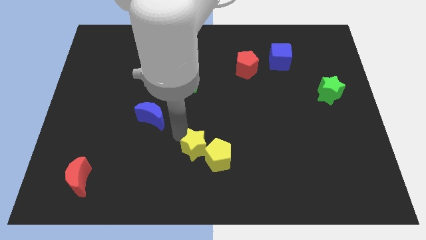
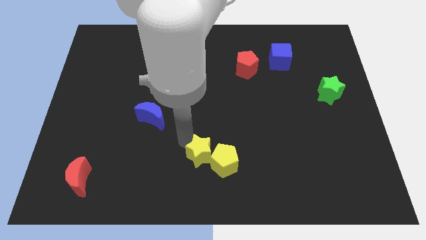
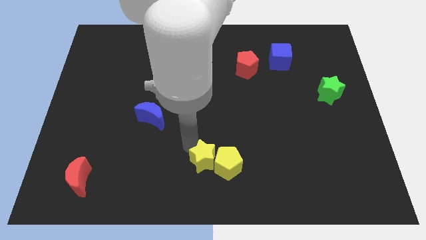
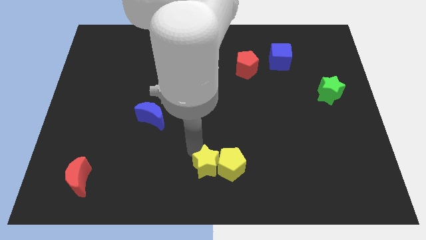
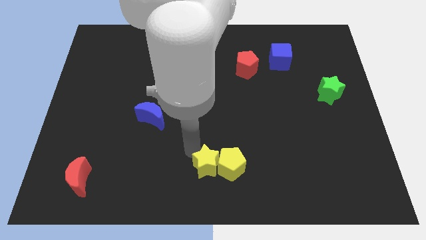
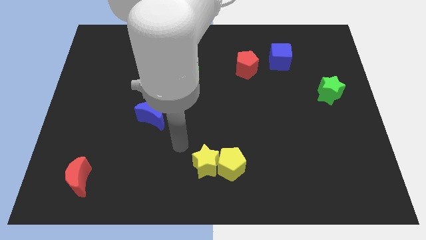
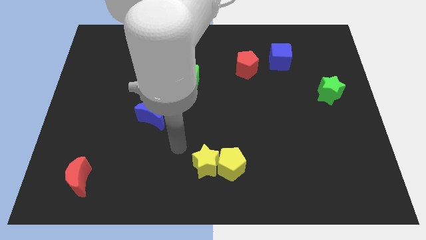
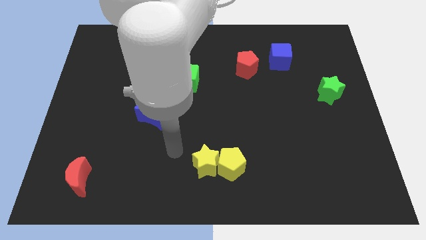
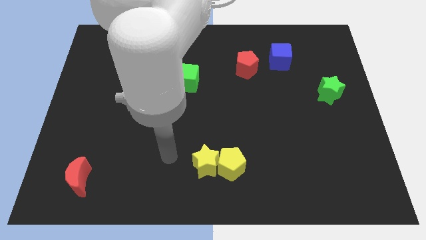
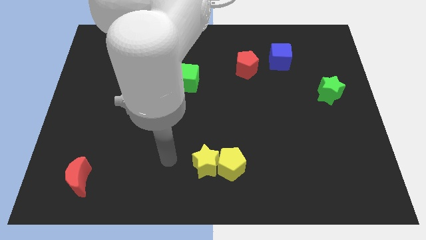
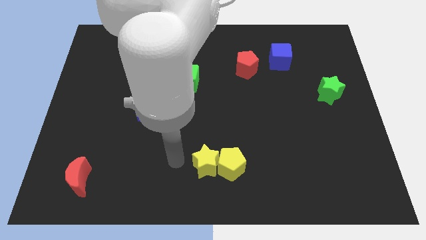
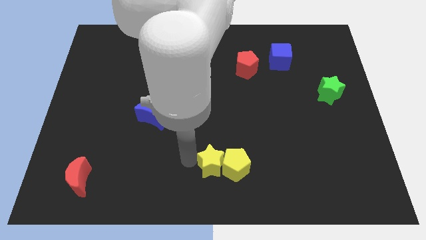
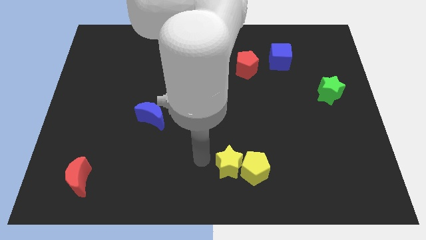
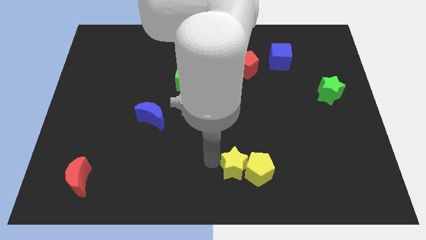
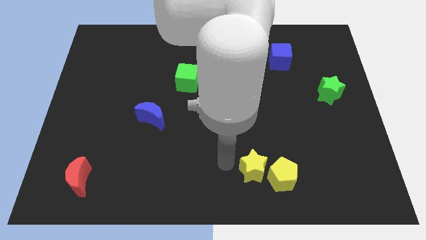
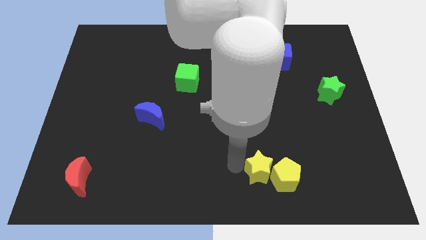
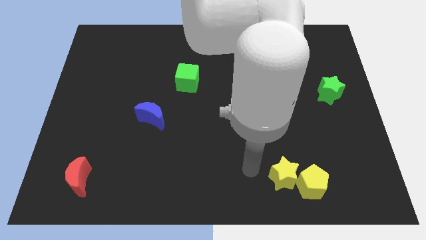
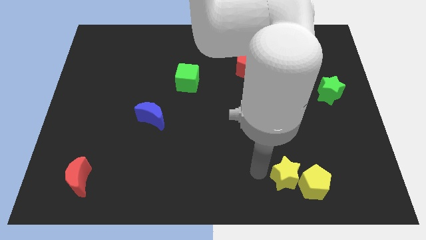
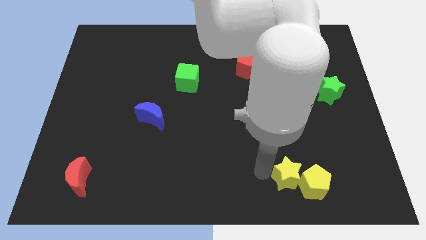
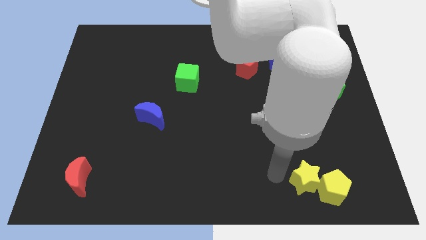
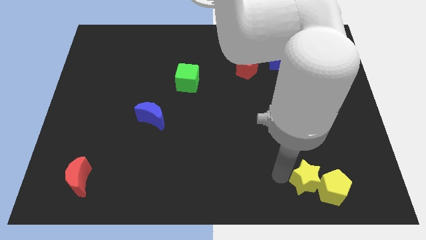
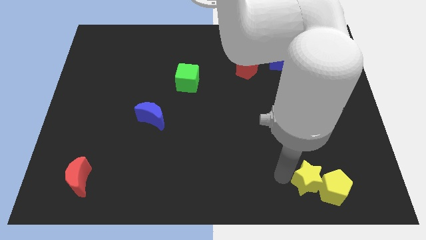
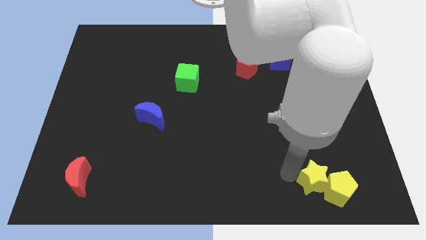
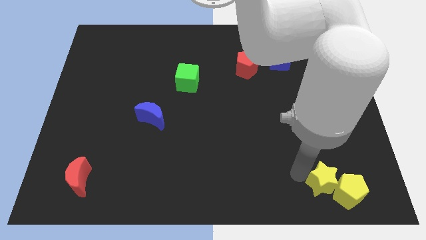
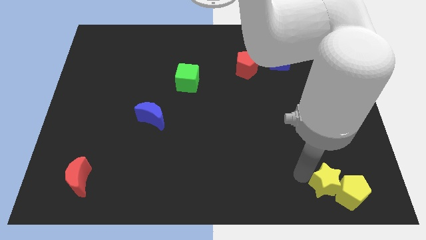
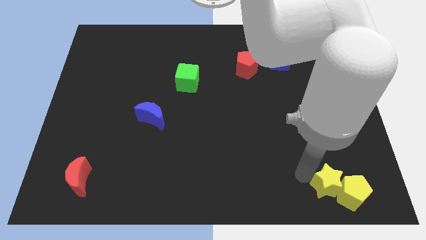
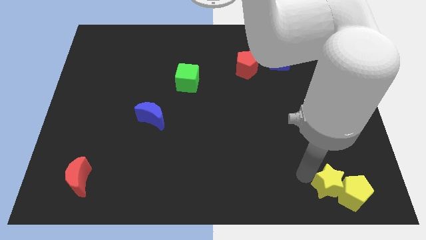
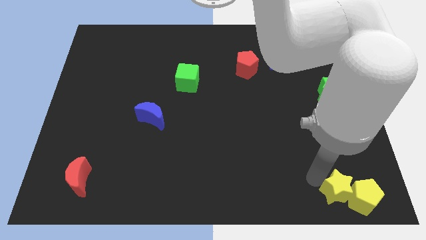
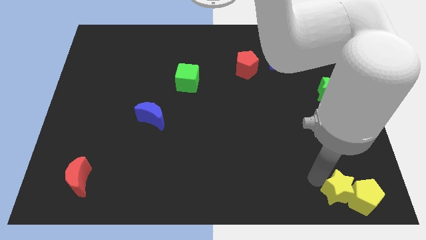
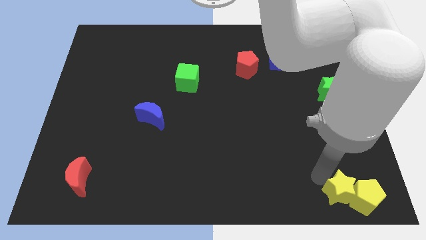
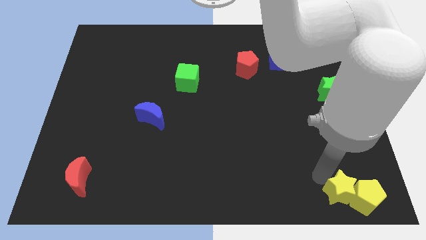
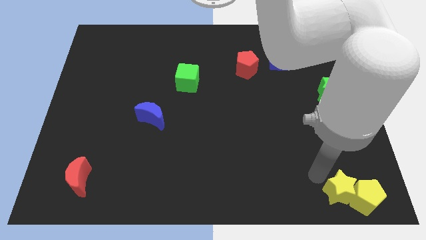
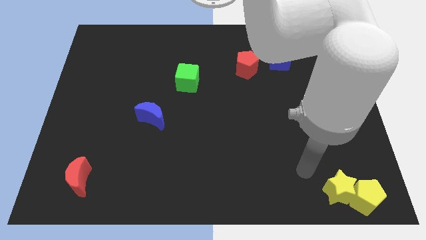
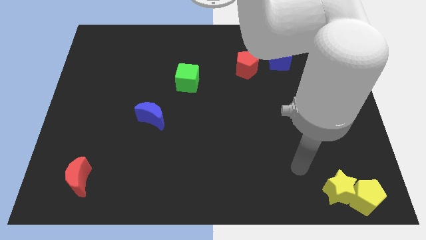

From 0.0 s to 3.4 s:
push the yellow star with yellow pentagon to the bottom right corner

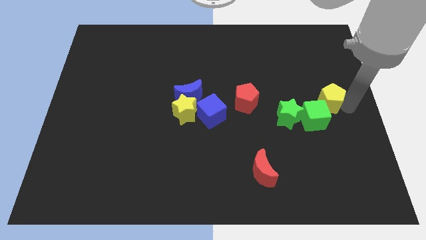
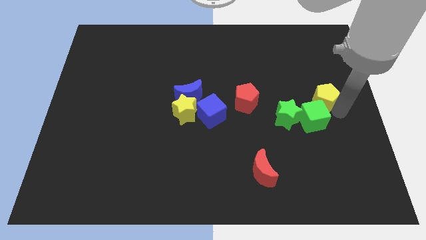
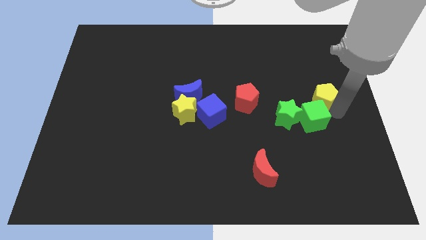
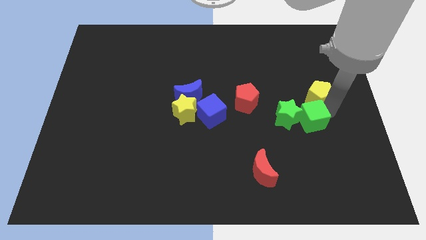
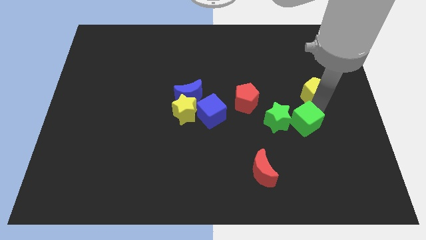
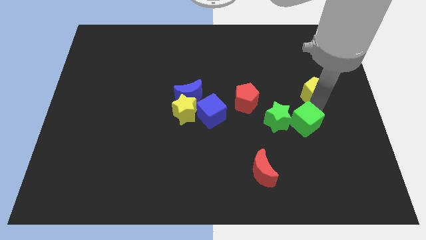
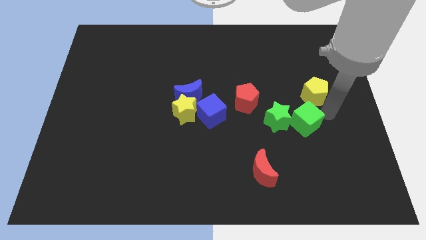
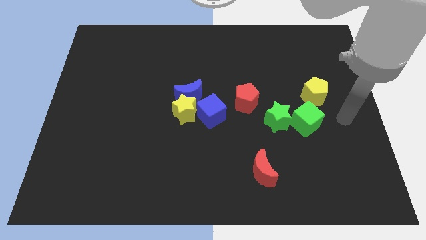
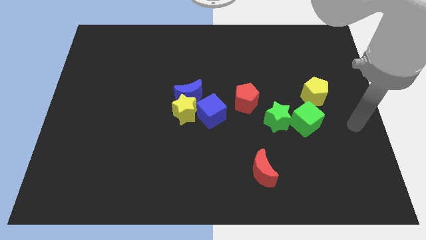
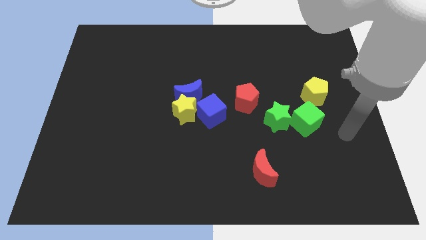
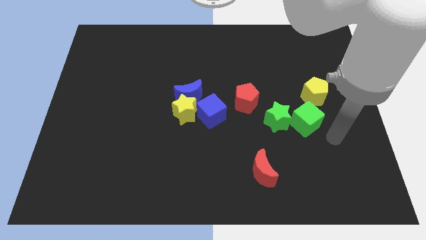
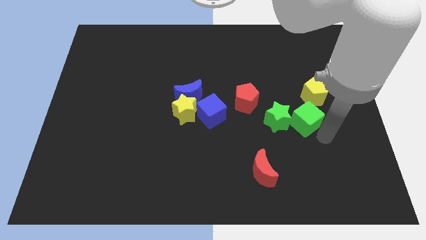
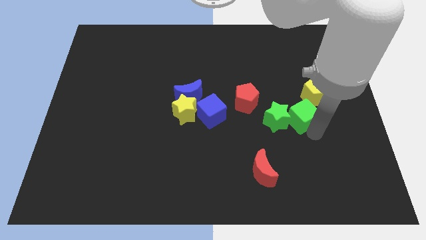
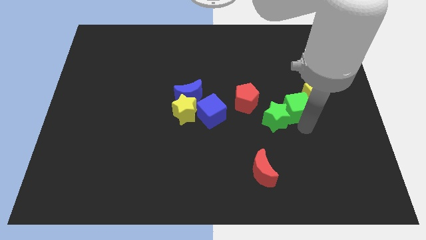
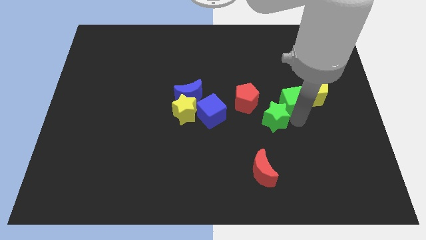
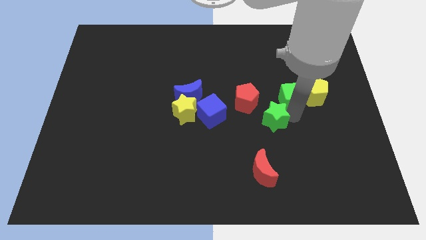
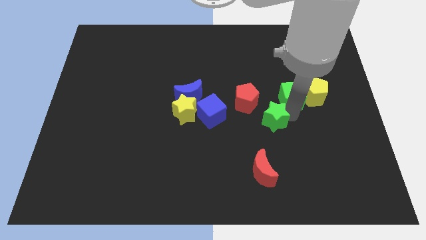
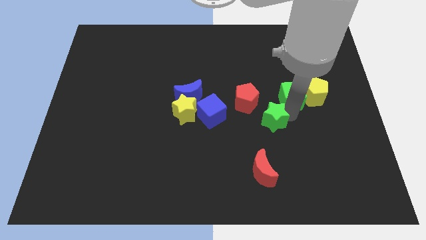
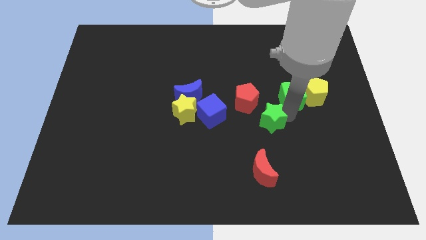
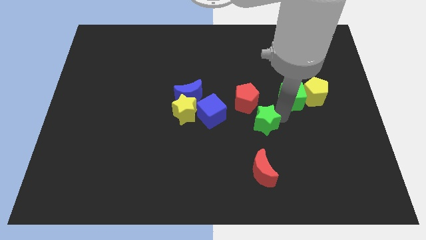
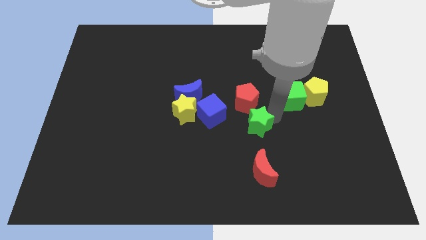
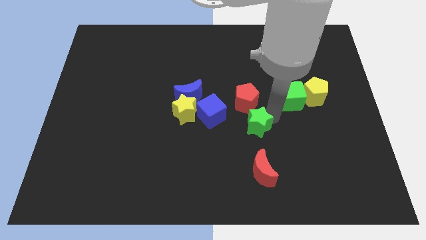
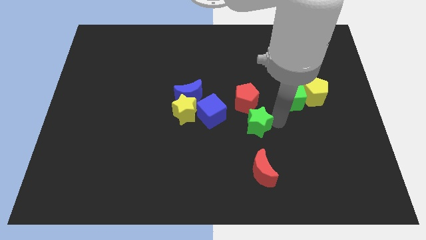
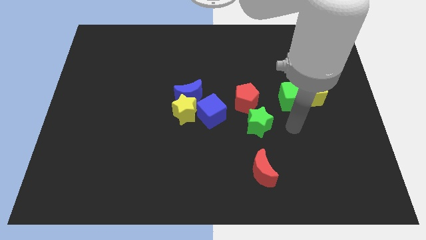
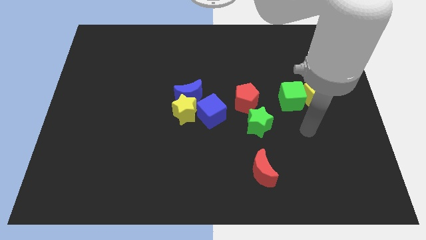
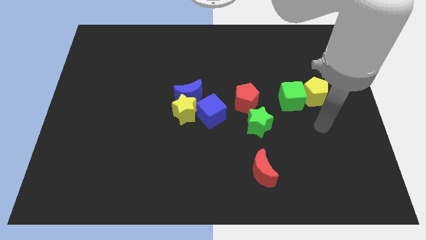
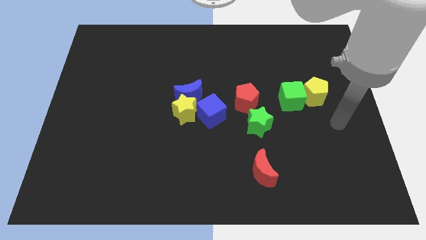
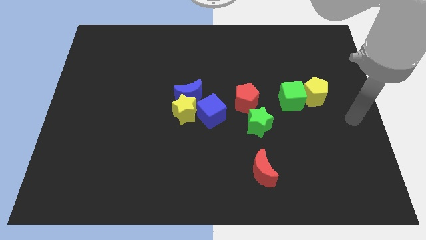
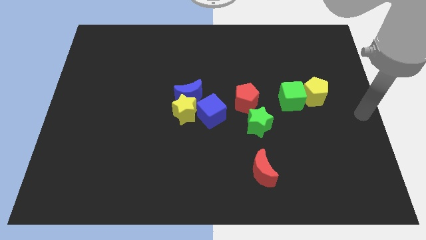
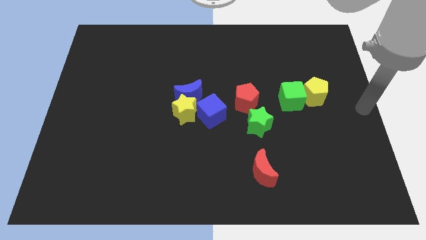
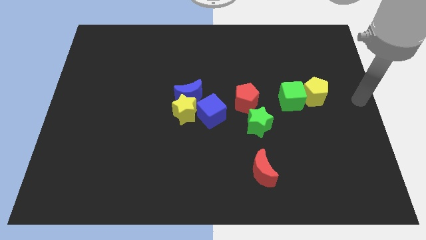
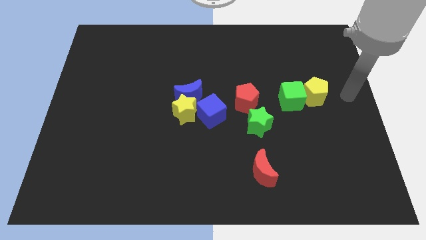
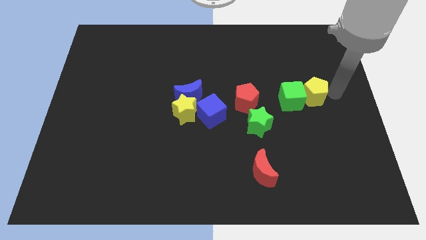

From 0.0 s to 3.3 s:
place the green star down to the red pentagon

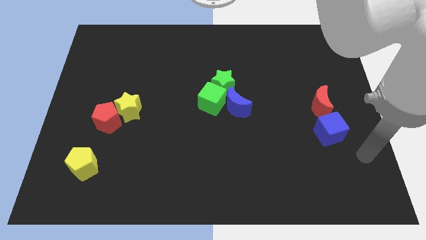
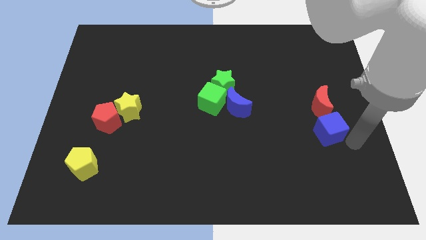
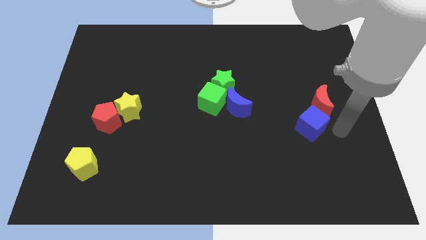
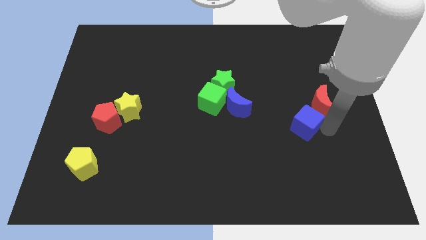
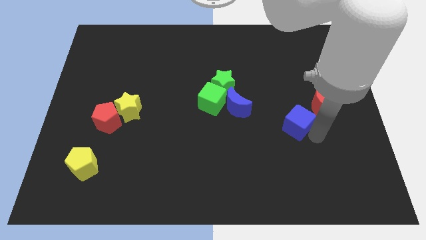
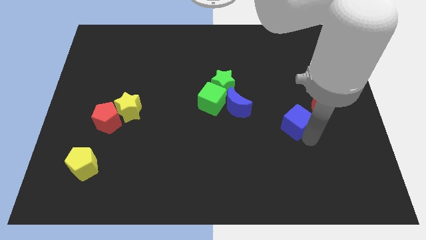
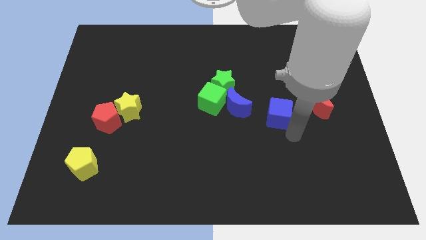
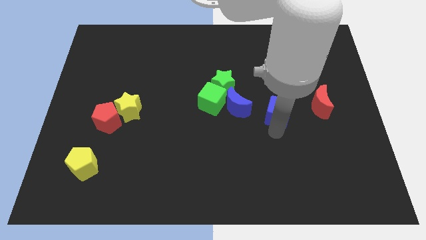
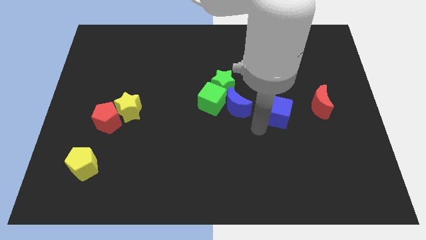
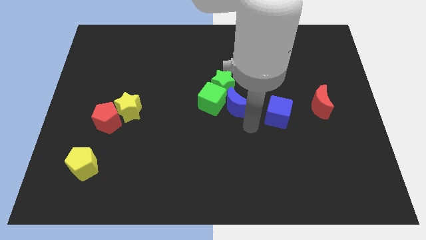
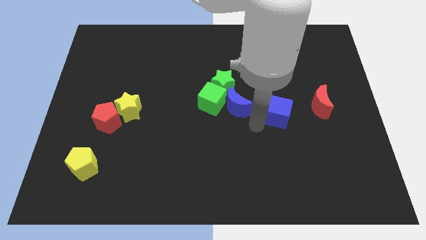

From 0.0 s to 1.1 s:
move the blue cube to the left of the red moon

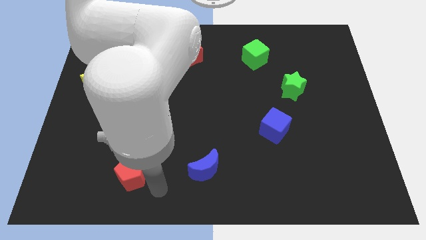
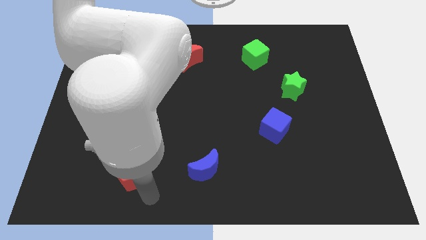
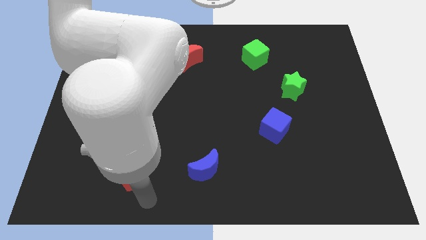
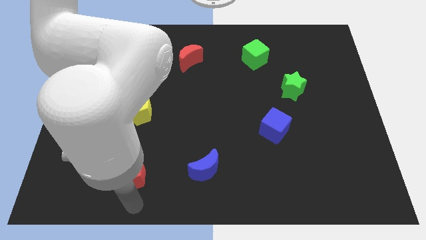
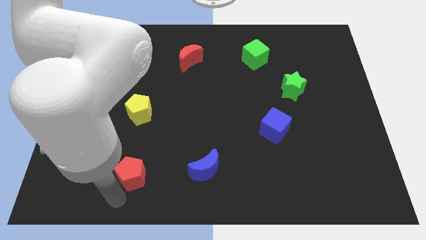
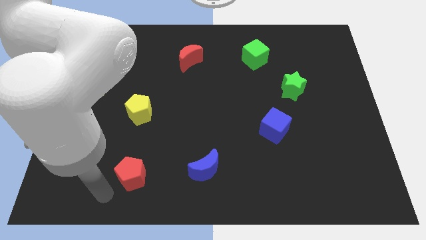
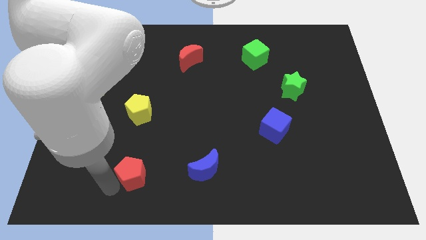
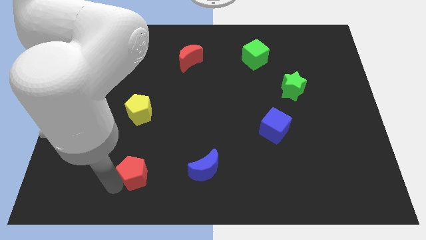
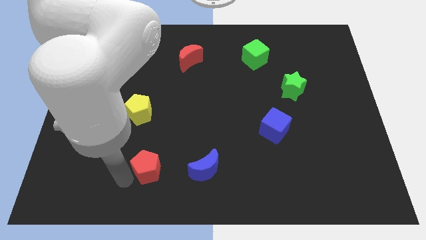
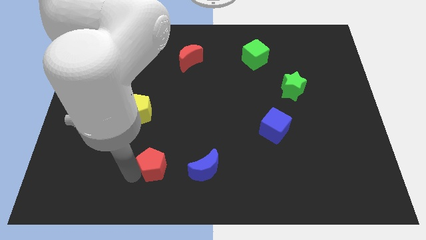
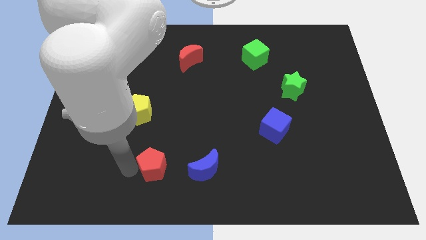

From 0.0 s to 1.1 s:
place the red pentagon parallel to the blue moon

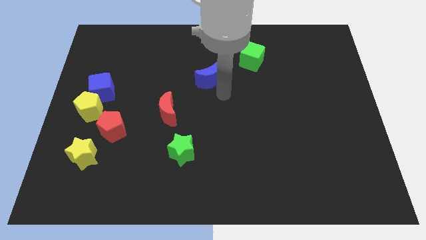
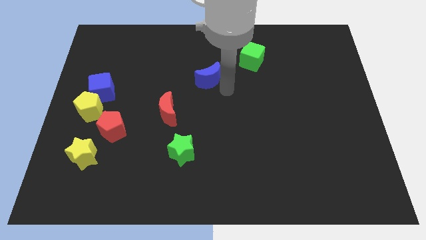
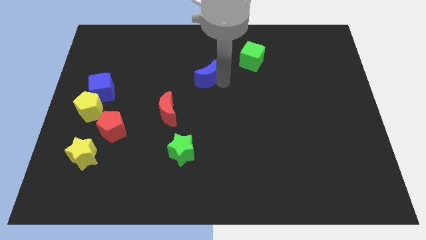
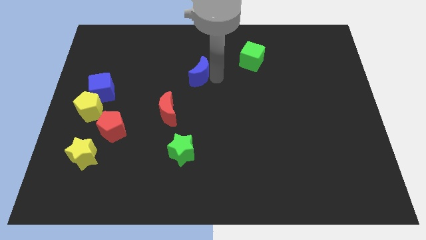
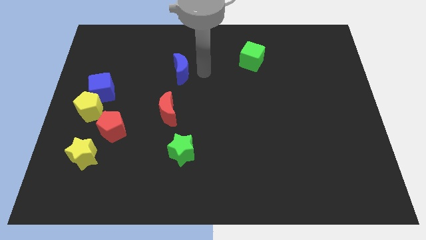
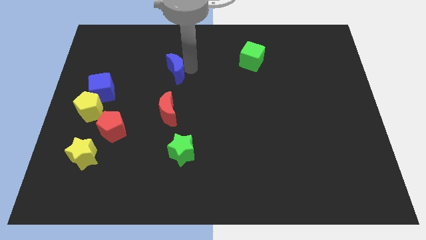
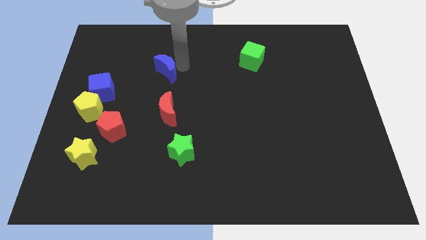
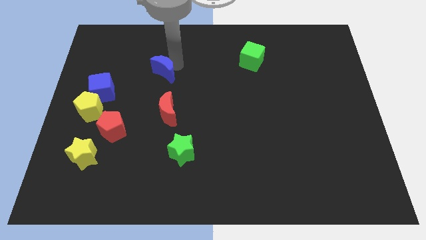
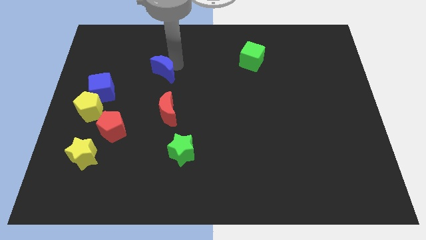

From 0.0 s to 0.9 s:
place the blue crescent vertically above the red crescent
